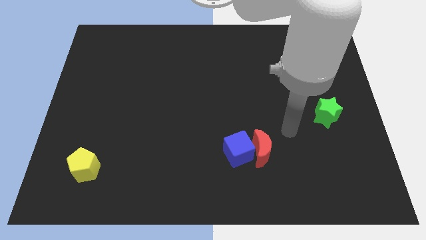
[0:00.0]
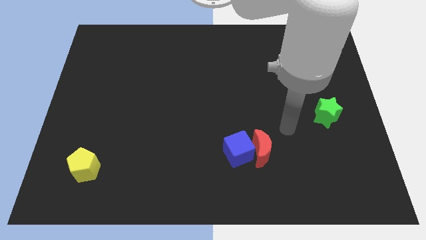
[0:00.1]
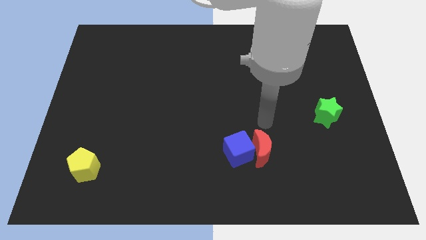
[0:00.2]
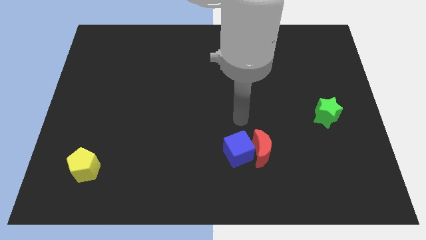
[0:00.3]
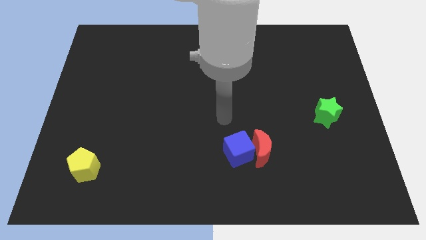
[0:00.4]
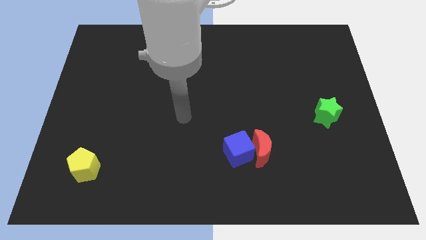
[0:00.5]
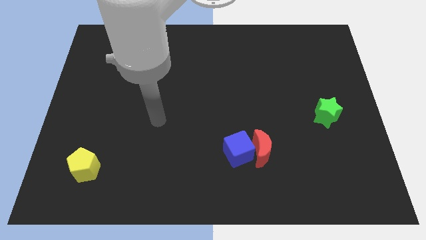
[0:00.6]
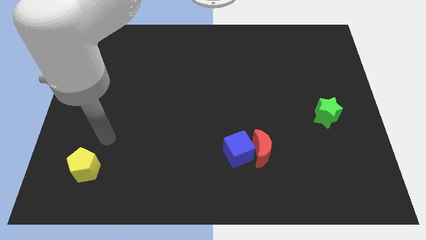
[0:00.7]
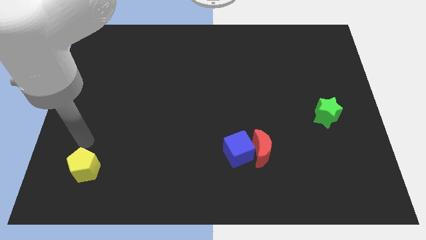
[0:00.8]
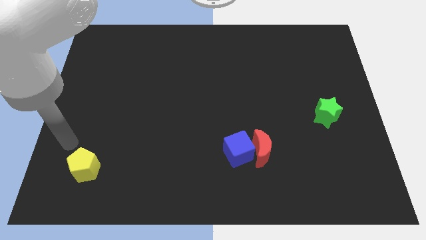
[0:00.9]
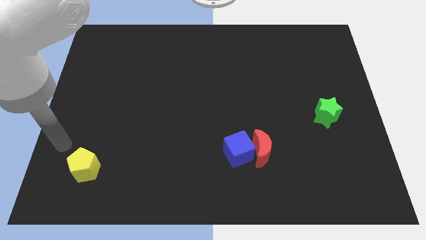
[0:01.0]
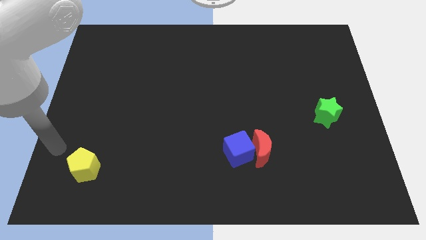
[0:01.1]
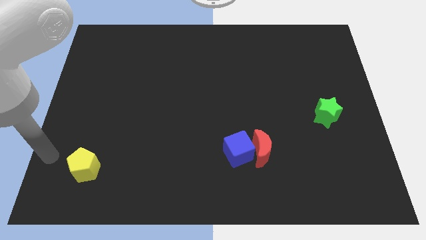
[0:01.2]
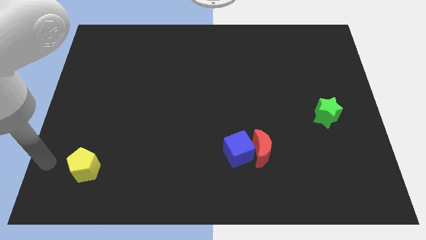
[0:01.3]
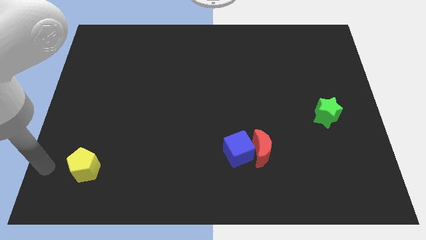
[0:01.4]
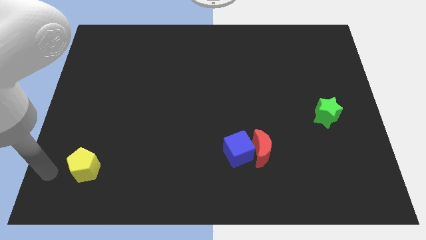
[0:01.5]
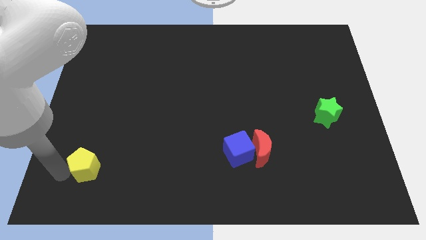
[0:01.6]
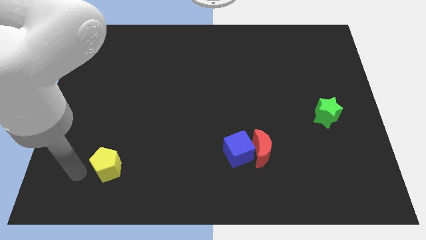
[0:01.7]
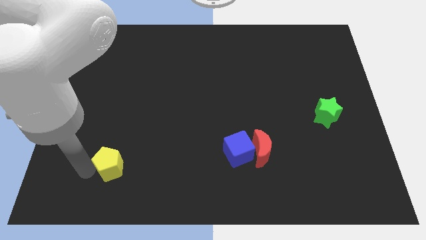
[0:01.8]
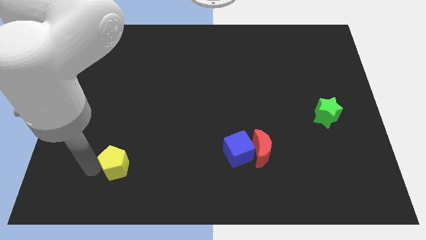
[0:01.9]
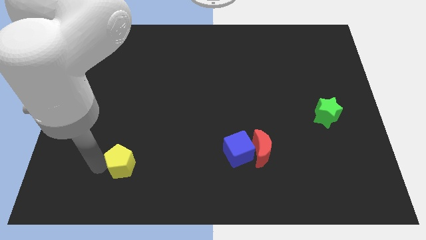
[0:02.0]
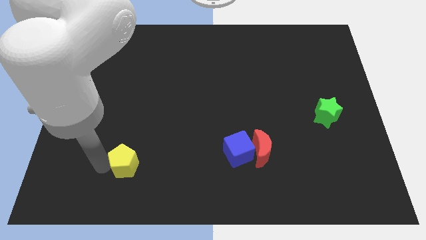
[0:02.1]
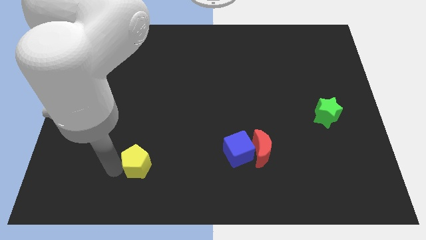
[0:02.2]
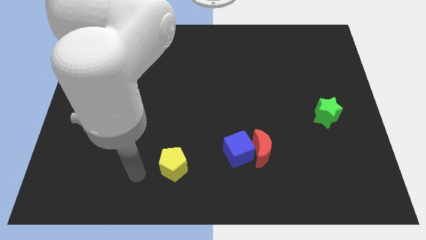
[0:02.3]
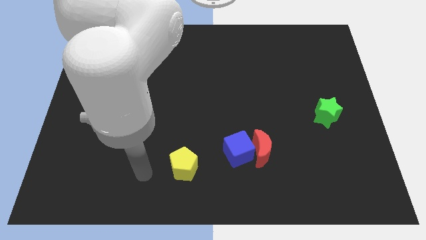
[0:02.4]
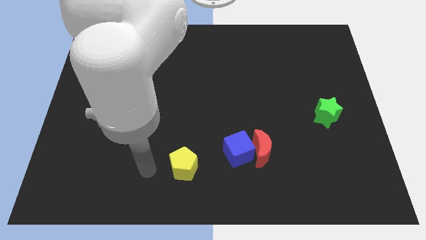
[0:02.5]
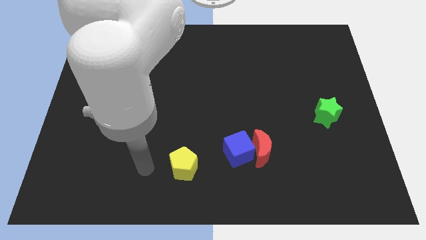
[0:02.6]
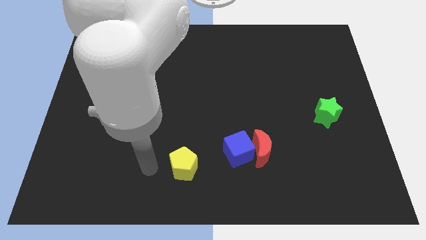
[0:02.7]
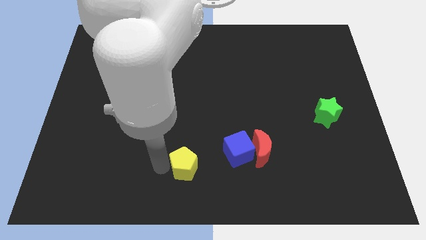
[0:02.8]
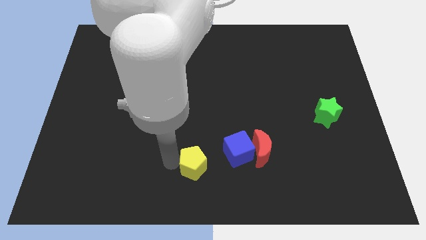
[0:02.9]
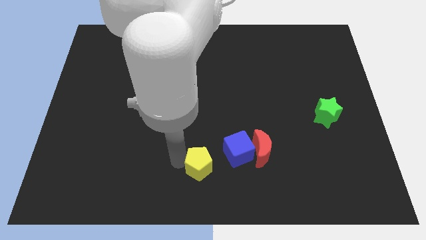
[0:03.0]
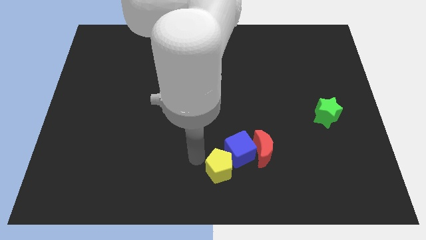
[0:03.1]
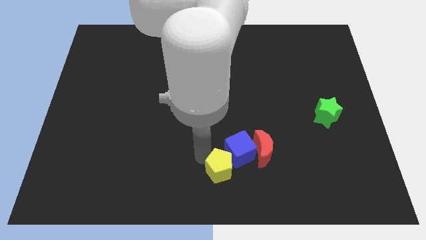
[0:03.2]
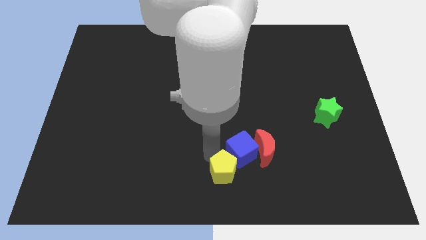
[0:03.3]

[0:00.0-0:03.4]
put the yellow pentagon towards the cube

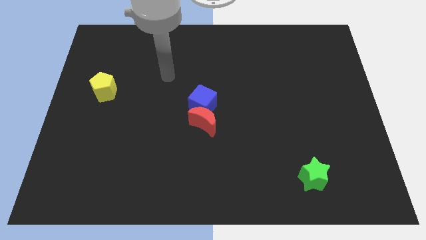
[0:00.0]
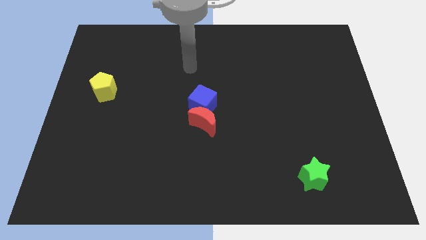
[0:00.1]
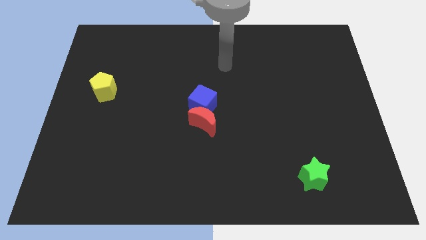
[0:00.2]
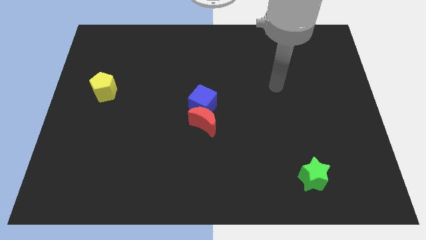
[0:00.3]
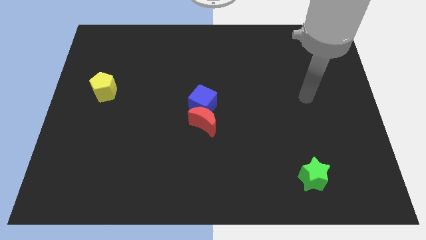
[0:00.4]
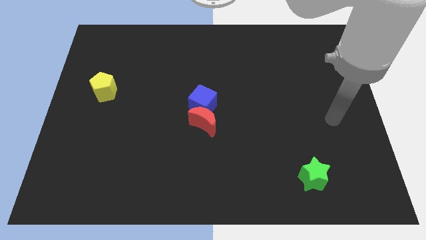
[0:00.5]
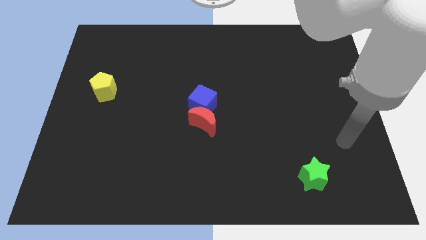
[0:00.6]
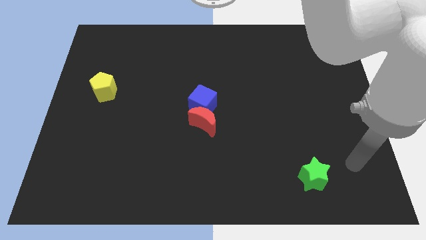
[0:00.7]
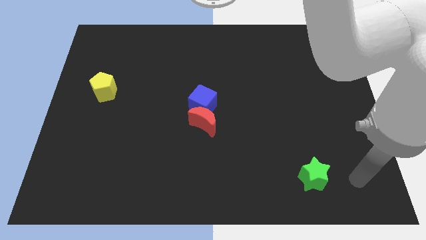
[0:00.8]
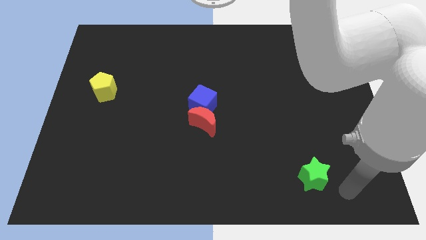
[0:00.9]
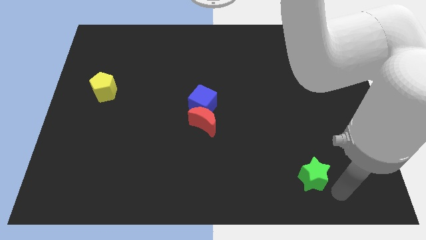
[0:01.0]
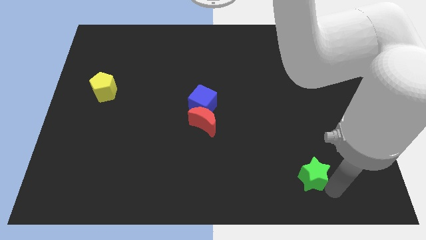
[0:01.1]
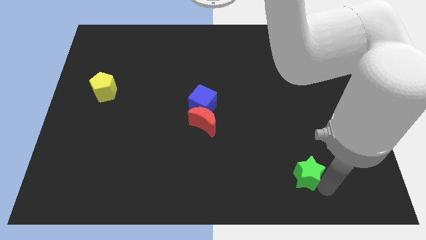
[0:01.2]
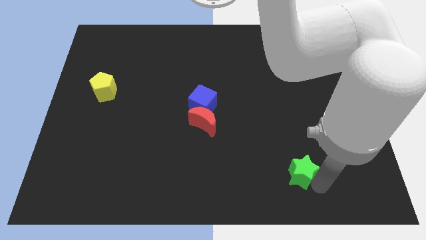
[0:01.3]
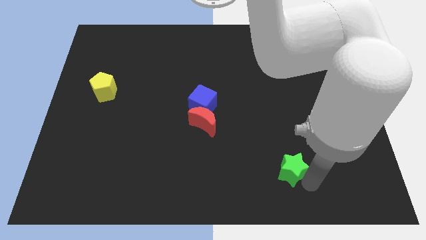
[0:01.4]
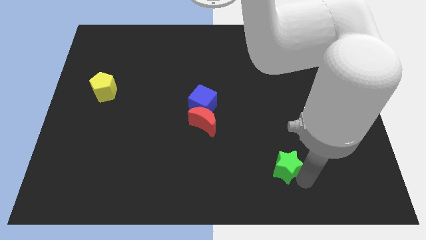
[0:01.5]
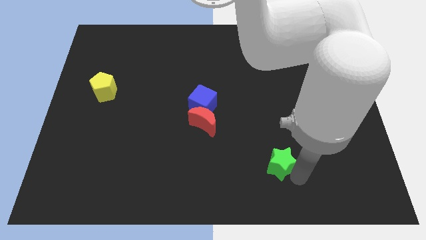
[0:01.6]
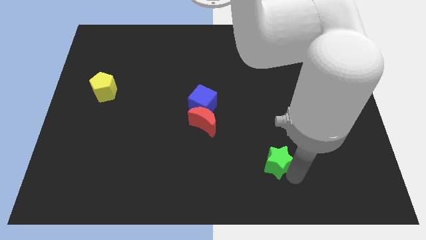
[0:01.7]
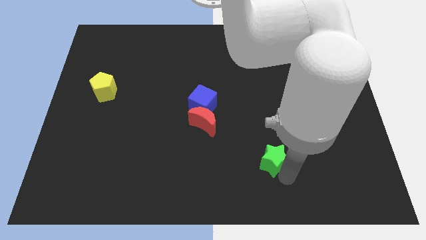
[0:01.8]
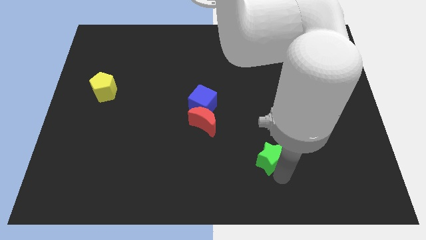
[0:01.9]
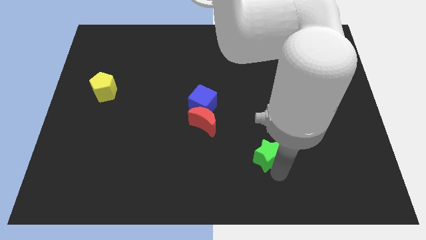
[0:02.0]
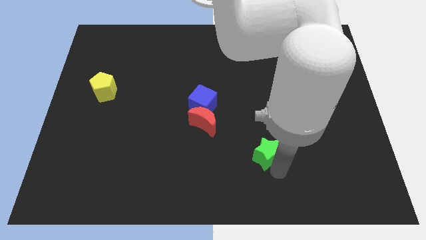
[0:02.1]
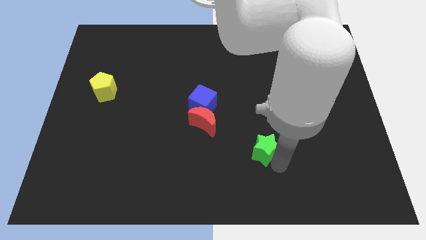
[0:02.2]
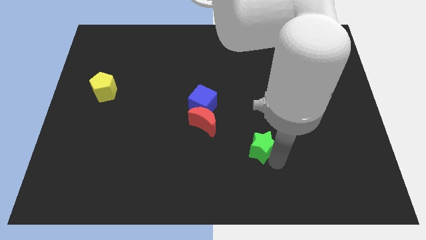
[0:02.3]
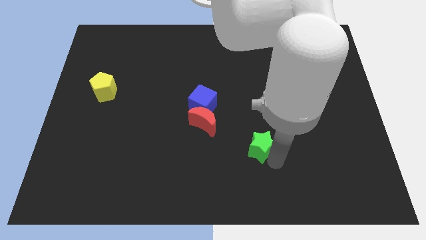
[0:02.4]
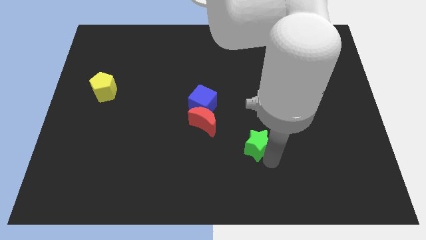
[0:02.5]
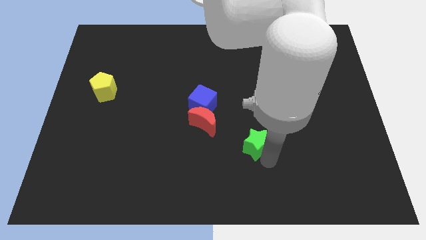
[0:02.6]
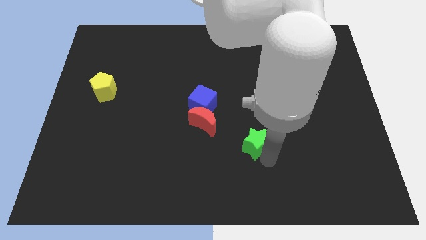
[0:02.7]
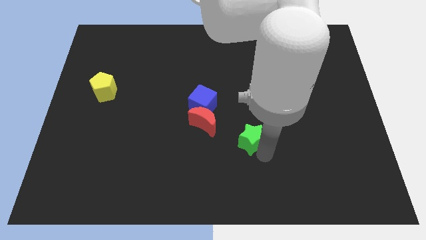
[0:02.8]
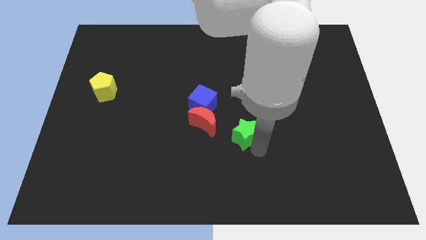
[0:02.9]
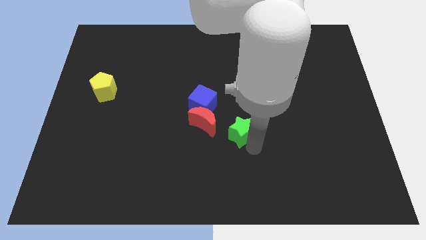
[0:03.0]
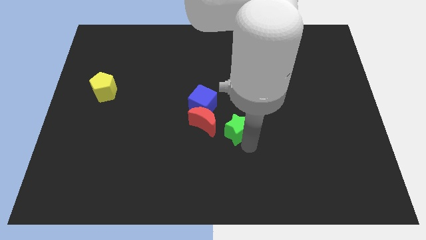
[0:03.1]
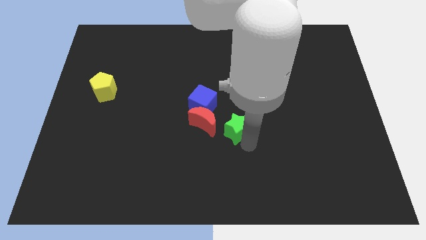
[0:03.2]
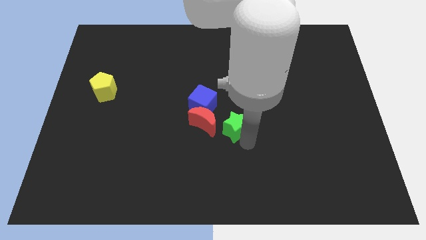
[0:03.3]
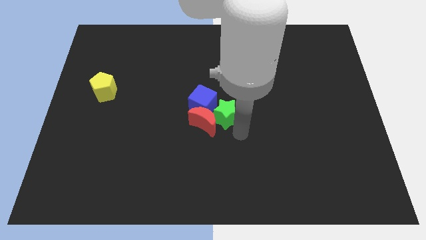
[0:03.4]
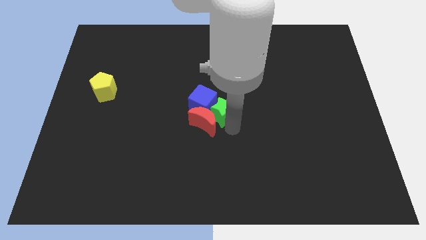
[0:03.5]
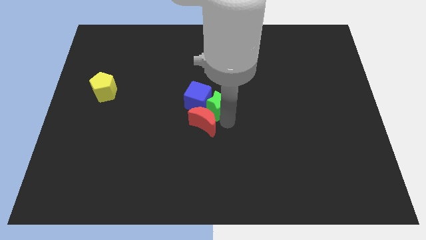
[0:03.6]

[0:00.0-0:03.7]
slide the green star close to the blue cube

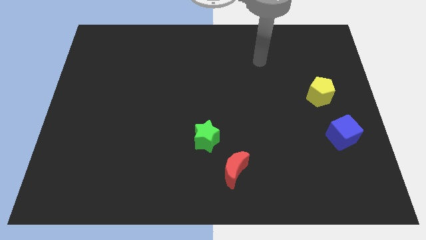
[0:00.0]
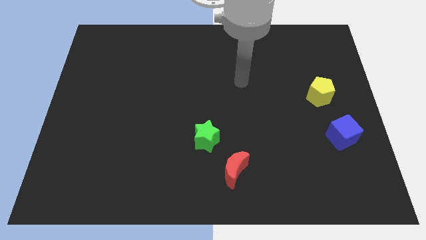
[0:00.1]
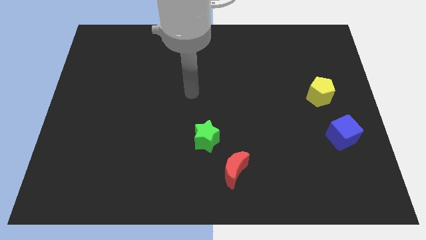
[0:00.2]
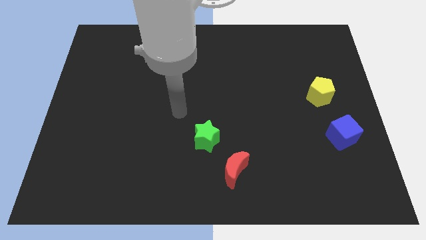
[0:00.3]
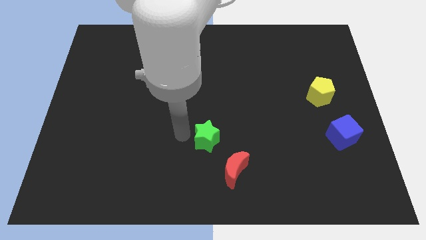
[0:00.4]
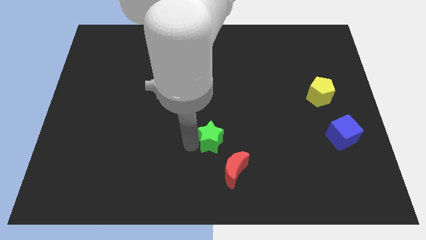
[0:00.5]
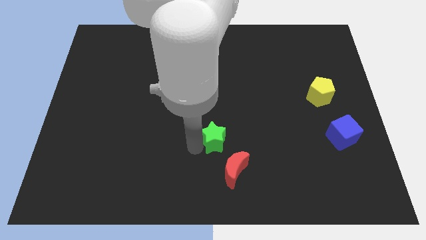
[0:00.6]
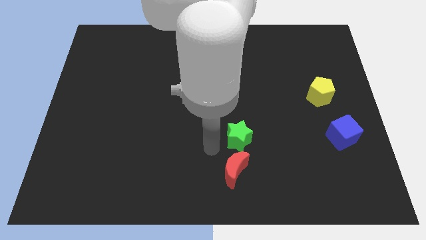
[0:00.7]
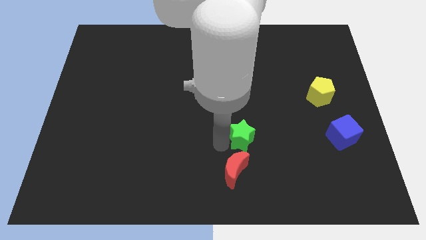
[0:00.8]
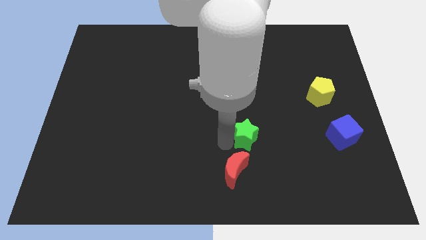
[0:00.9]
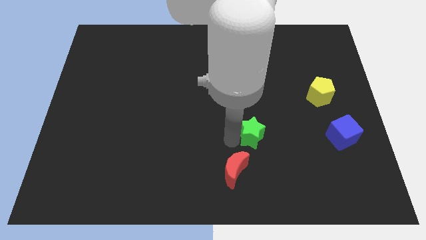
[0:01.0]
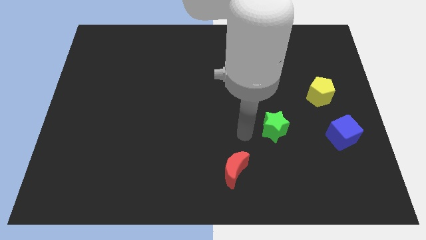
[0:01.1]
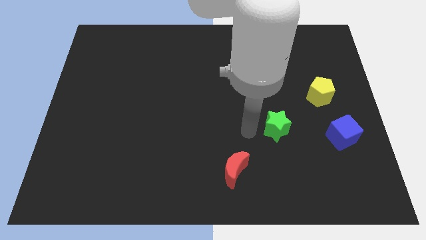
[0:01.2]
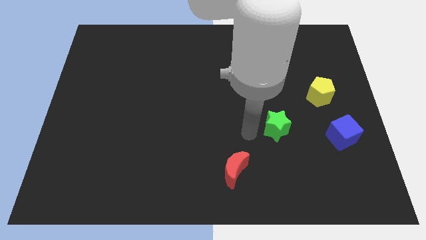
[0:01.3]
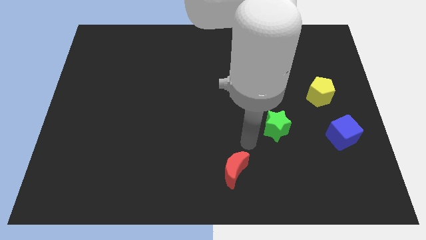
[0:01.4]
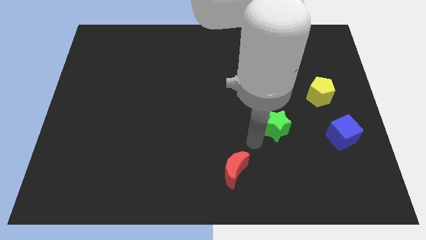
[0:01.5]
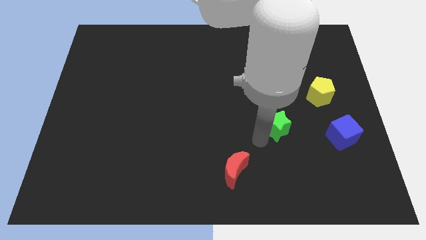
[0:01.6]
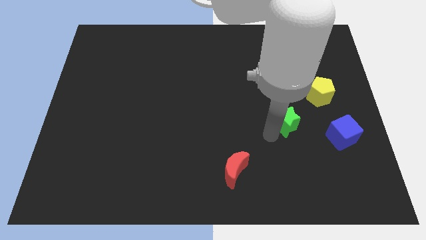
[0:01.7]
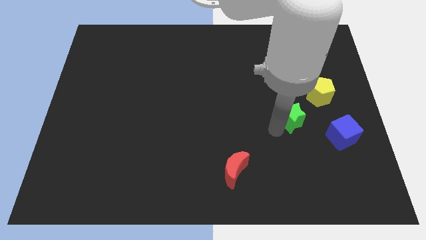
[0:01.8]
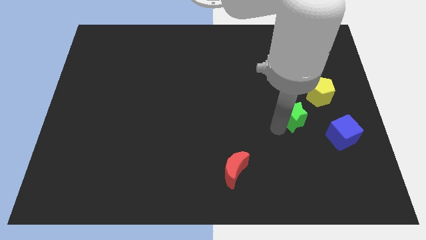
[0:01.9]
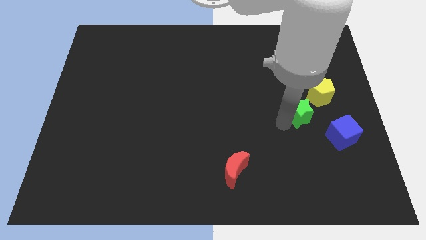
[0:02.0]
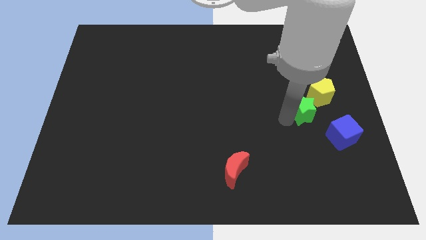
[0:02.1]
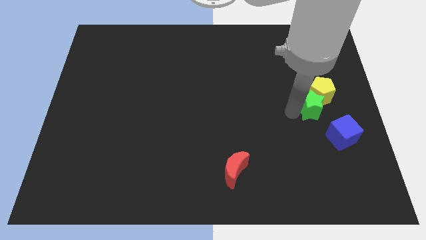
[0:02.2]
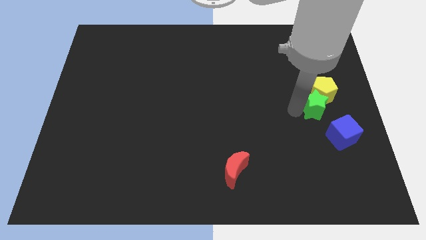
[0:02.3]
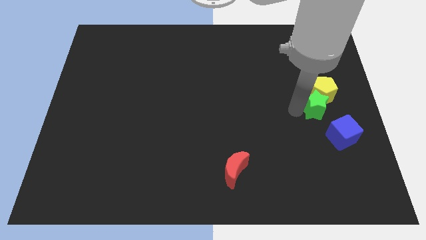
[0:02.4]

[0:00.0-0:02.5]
push the star to the yellow pentagon
